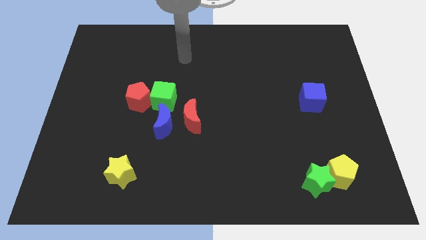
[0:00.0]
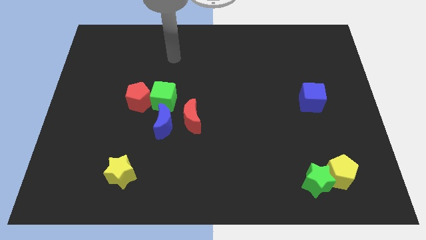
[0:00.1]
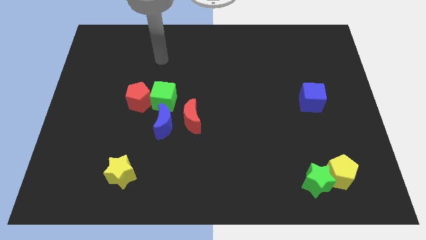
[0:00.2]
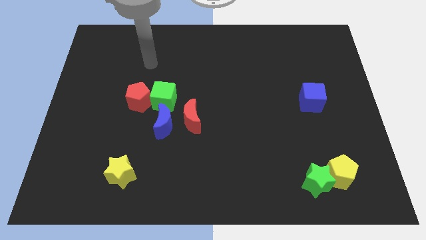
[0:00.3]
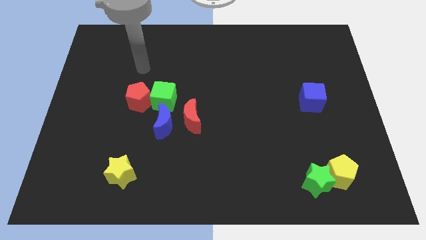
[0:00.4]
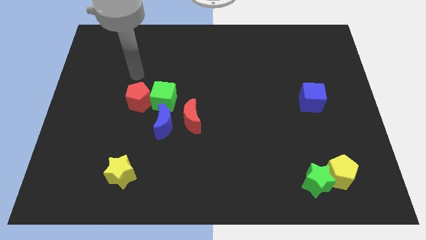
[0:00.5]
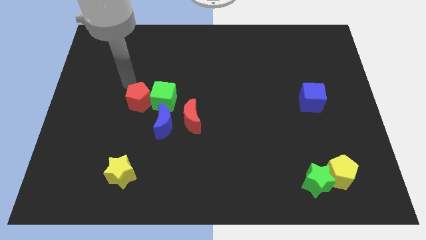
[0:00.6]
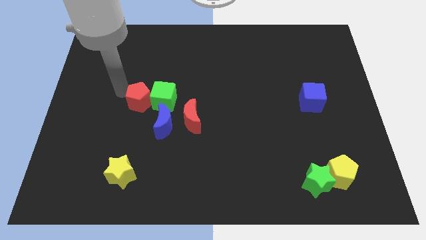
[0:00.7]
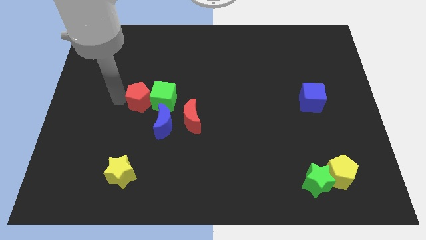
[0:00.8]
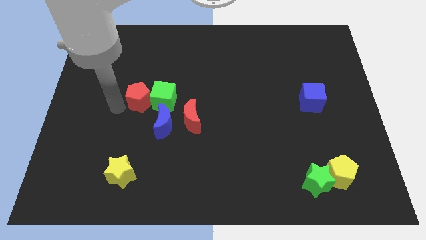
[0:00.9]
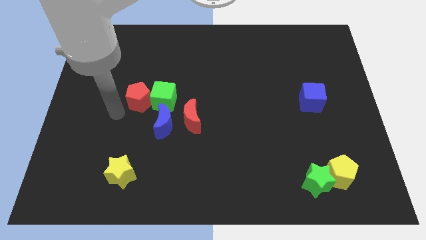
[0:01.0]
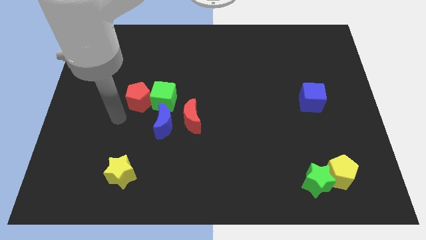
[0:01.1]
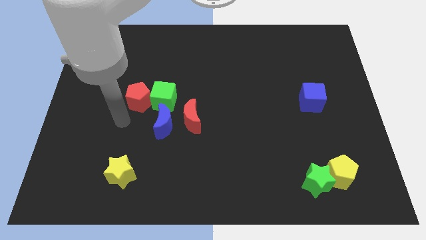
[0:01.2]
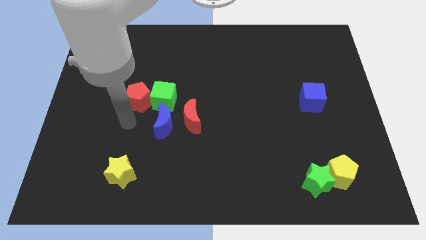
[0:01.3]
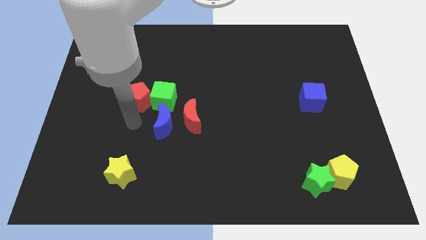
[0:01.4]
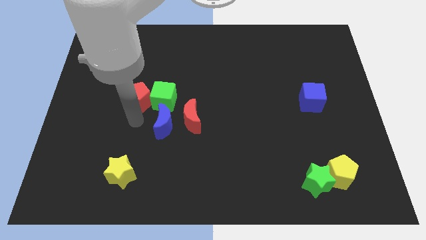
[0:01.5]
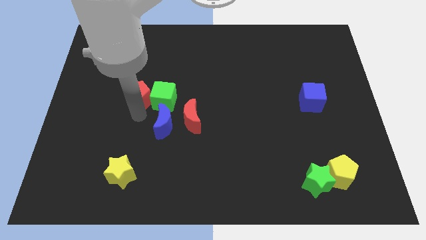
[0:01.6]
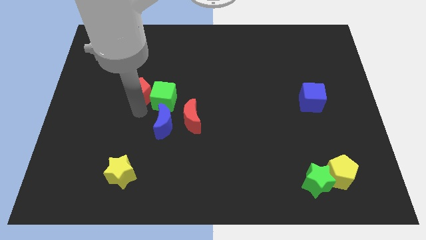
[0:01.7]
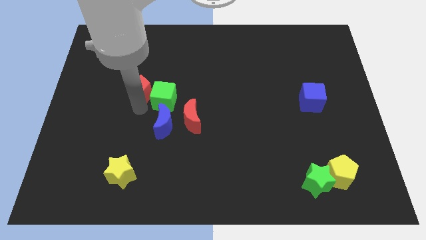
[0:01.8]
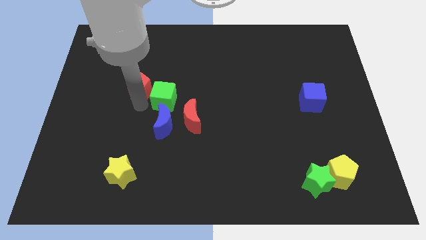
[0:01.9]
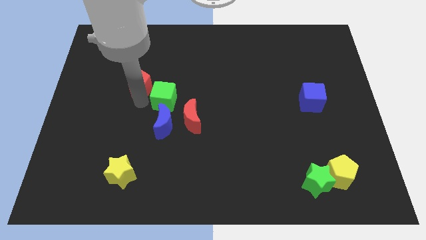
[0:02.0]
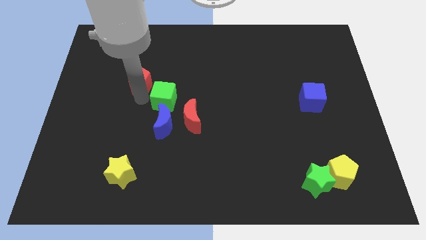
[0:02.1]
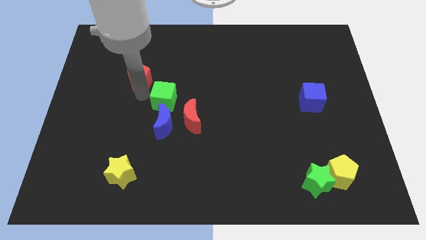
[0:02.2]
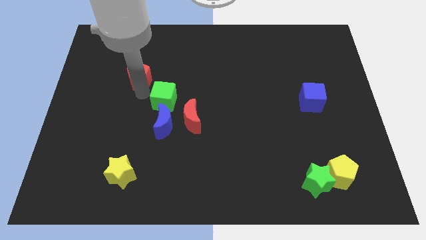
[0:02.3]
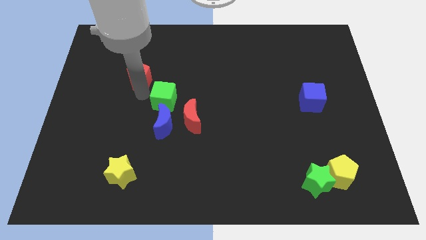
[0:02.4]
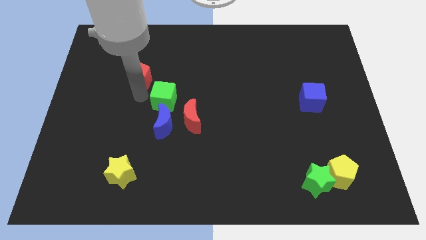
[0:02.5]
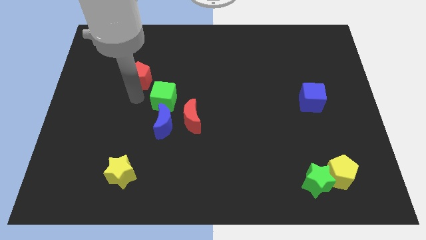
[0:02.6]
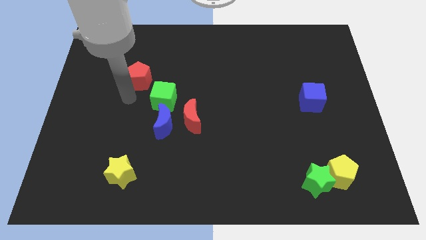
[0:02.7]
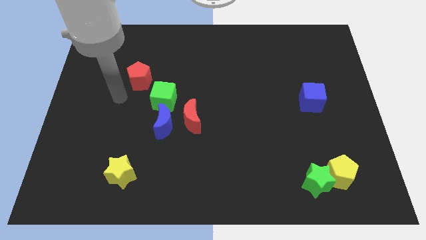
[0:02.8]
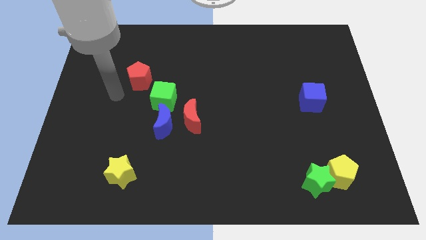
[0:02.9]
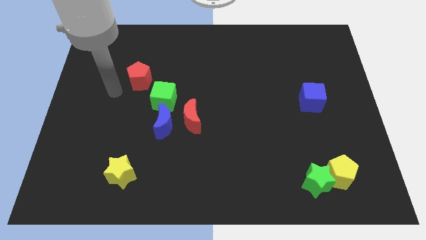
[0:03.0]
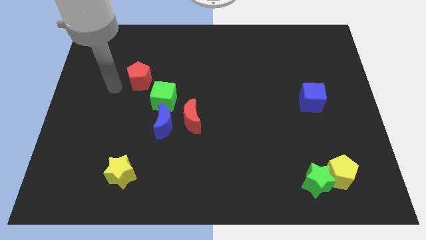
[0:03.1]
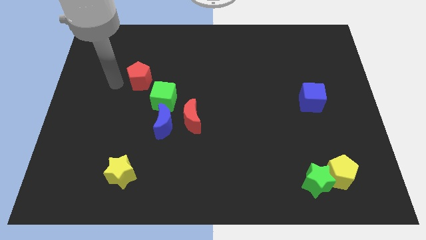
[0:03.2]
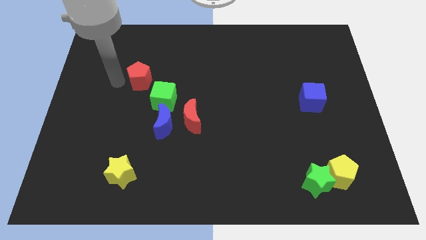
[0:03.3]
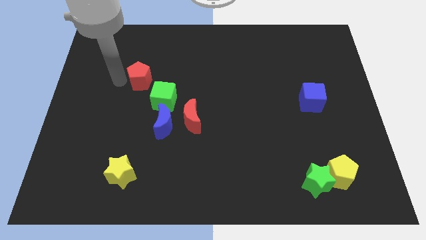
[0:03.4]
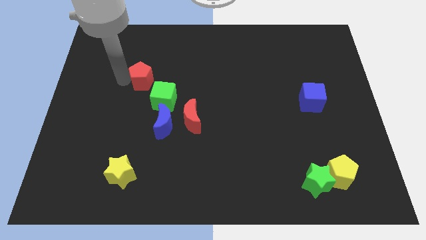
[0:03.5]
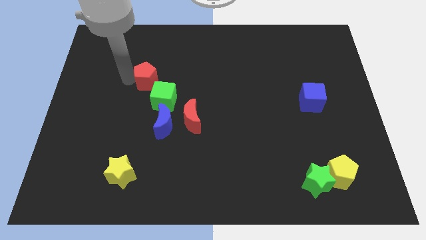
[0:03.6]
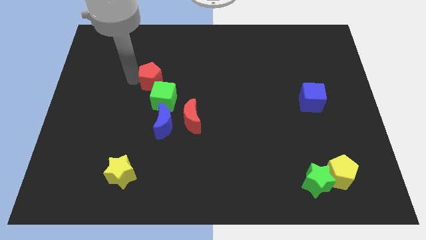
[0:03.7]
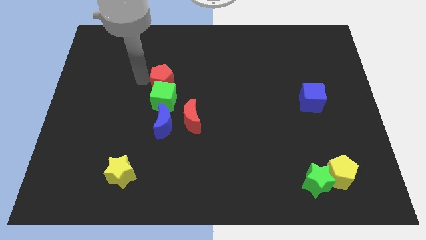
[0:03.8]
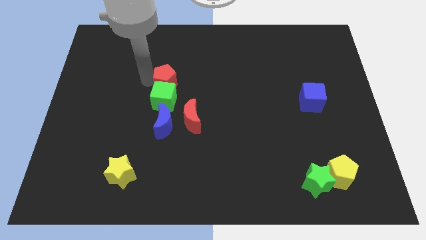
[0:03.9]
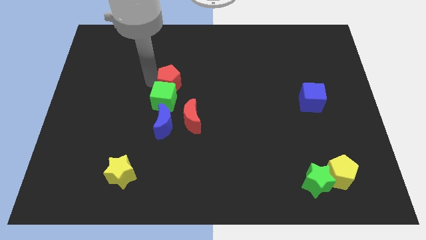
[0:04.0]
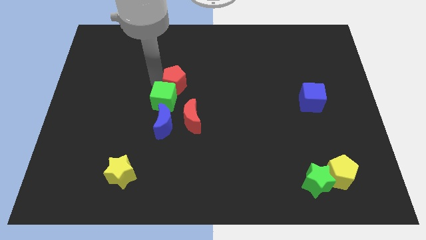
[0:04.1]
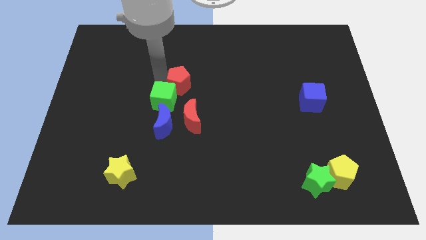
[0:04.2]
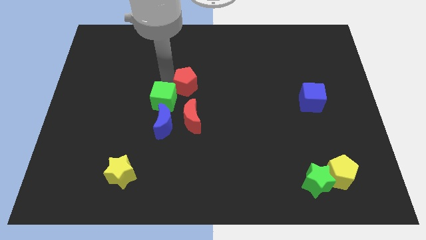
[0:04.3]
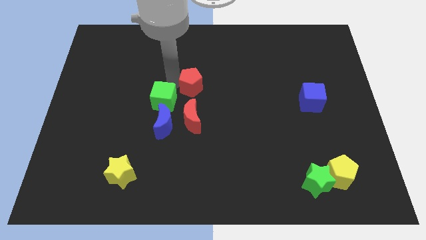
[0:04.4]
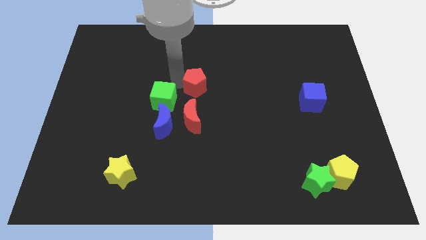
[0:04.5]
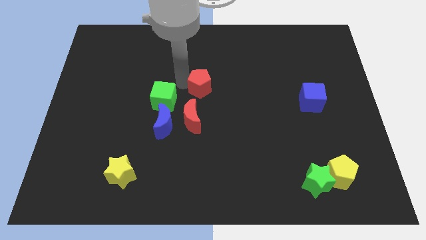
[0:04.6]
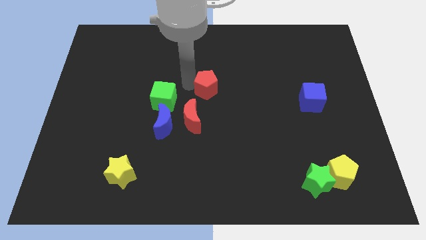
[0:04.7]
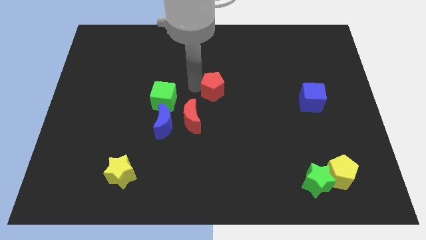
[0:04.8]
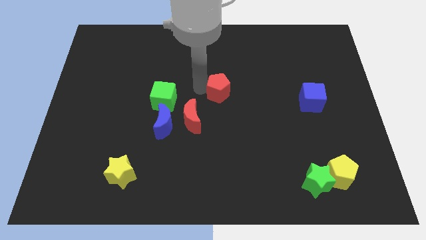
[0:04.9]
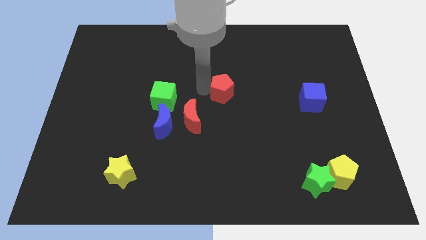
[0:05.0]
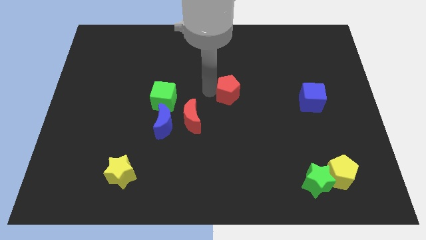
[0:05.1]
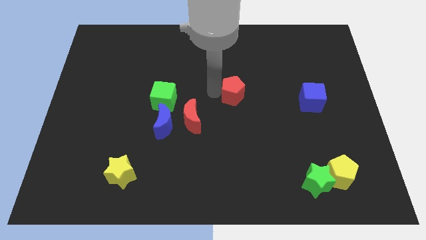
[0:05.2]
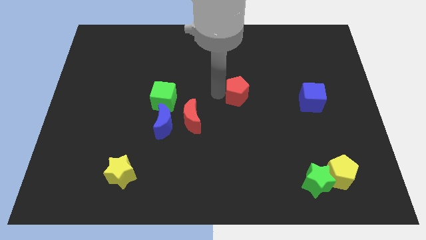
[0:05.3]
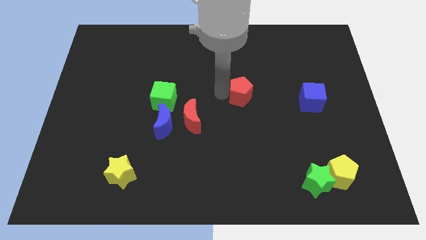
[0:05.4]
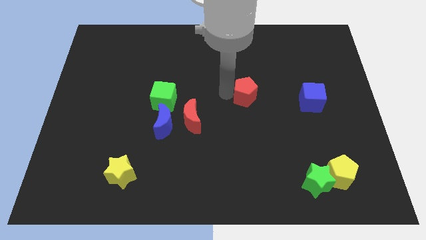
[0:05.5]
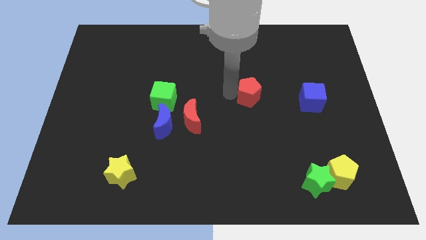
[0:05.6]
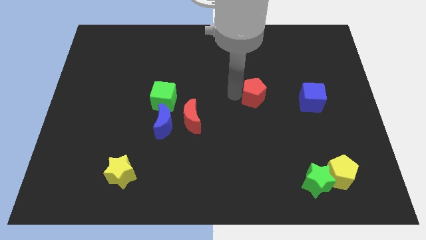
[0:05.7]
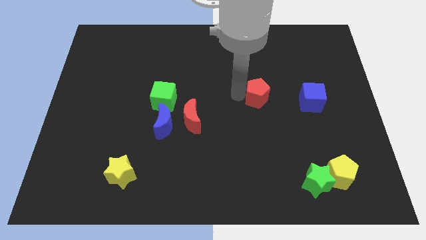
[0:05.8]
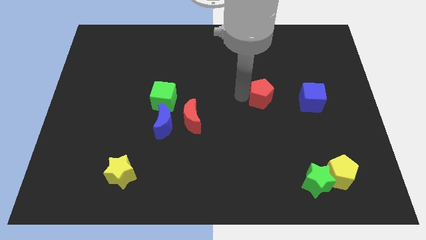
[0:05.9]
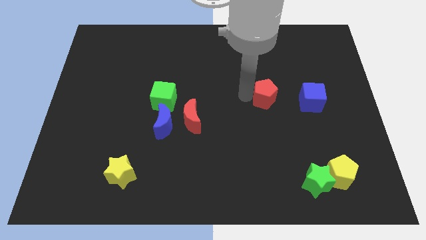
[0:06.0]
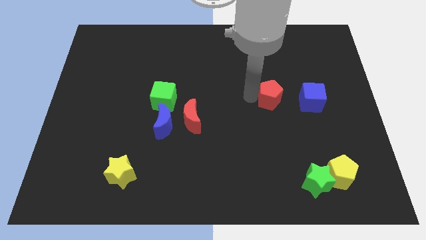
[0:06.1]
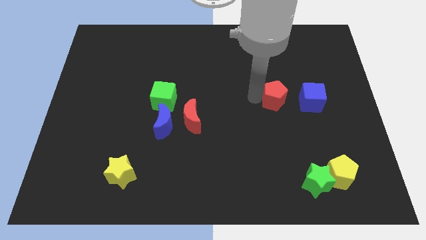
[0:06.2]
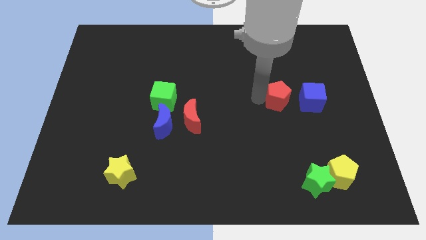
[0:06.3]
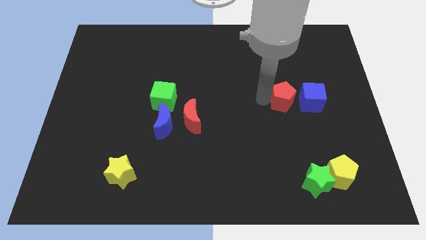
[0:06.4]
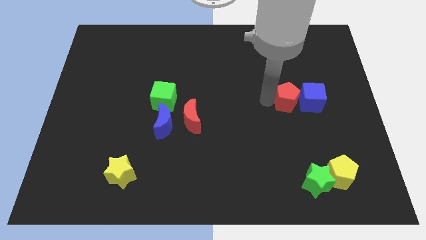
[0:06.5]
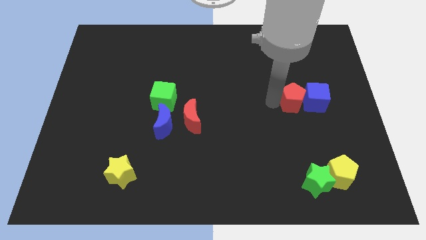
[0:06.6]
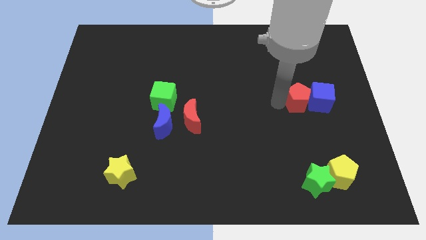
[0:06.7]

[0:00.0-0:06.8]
move the red pentagon close to the blue cube

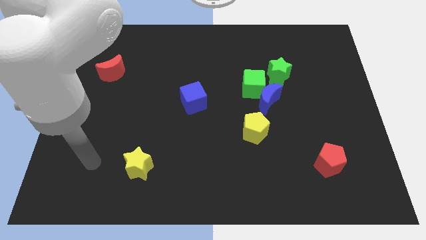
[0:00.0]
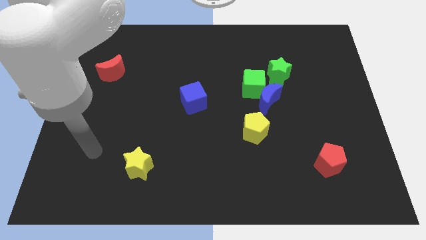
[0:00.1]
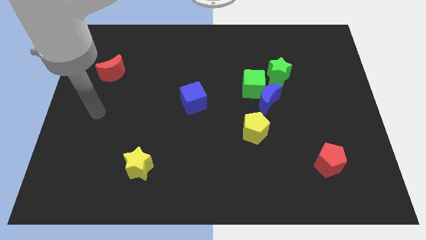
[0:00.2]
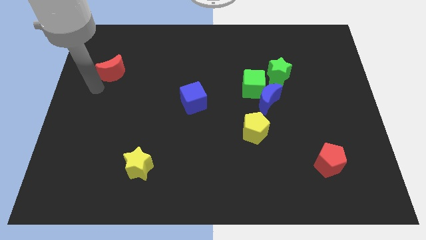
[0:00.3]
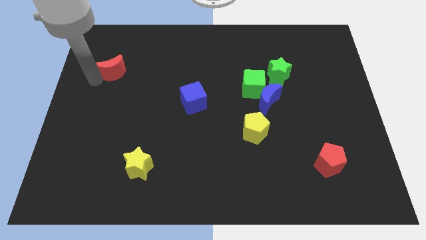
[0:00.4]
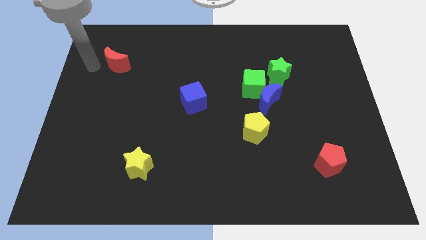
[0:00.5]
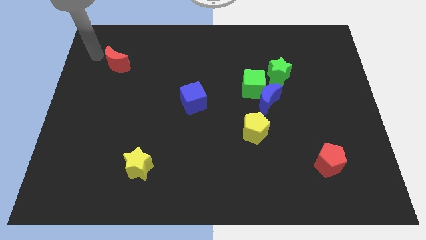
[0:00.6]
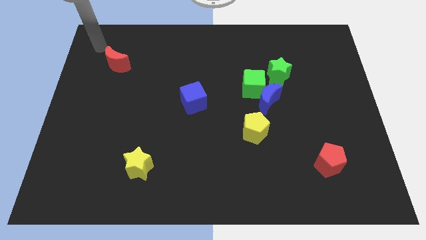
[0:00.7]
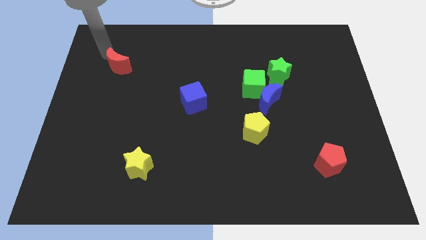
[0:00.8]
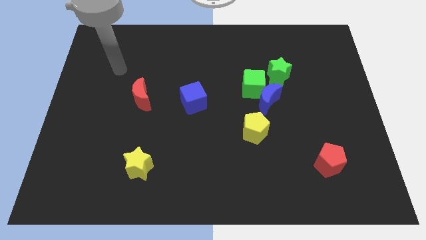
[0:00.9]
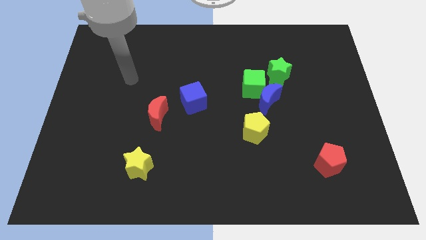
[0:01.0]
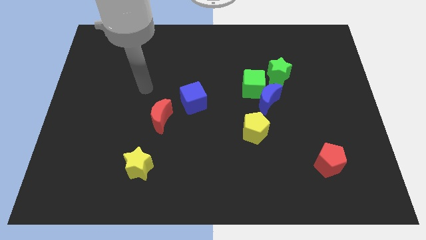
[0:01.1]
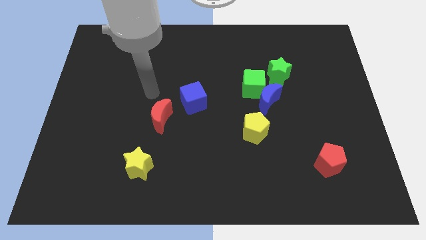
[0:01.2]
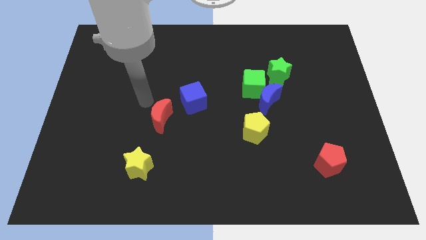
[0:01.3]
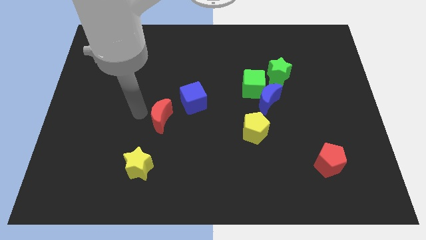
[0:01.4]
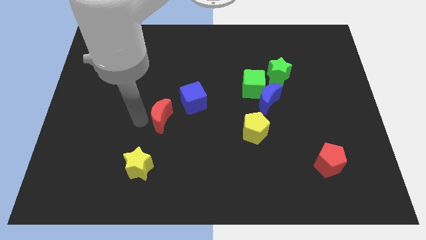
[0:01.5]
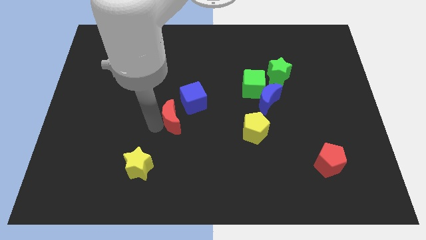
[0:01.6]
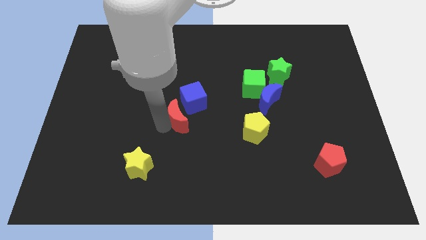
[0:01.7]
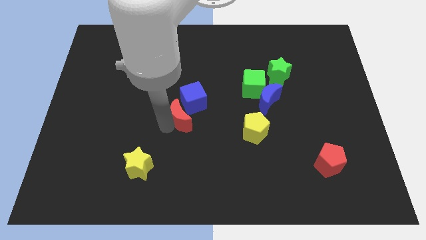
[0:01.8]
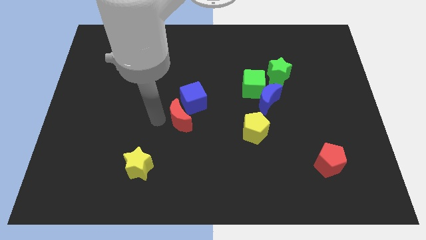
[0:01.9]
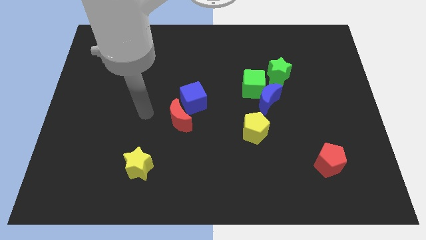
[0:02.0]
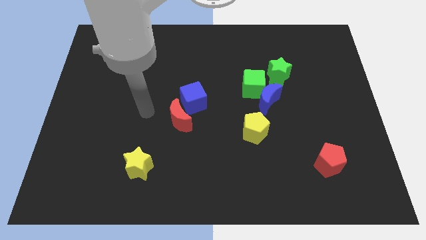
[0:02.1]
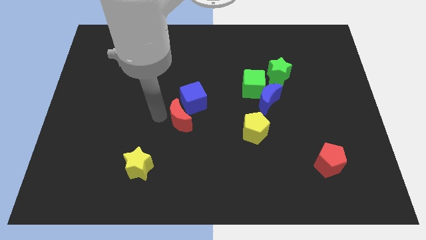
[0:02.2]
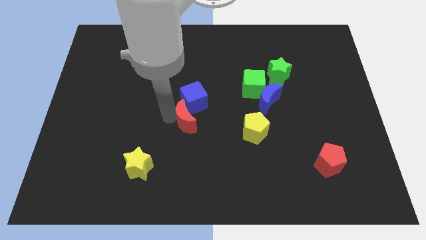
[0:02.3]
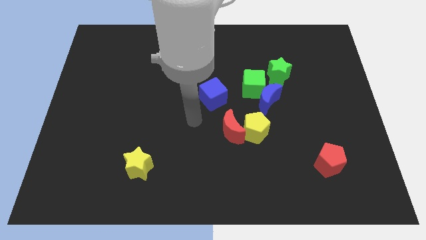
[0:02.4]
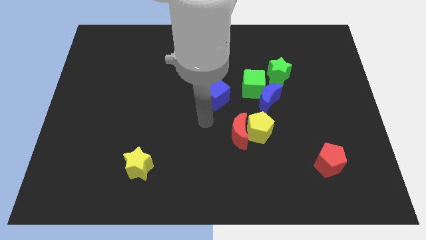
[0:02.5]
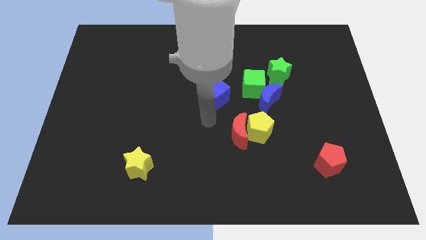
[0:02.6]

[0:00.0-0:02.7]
slide the red moon towards the yellow pentagon
